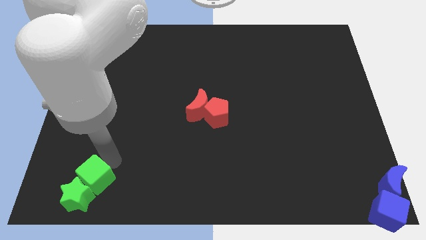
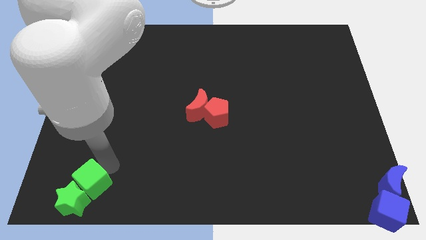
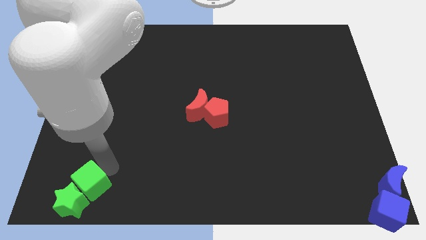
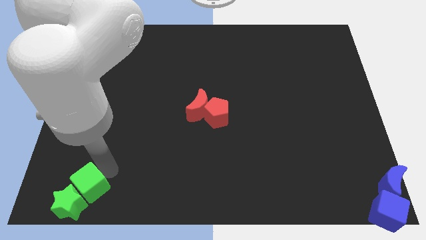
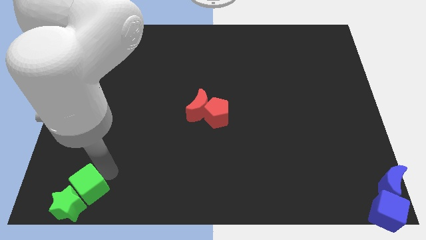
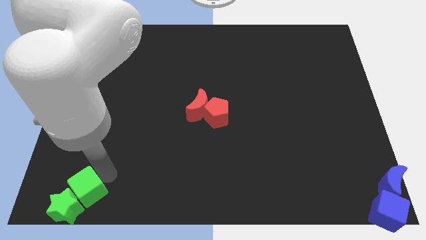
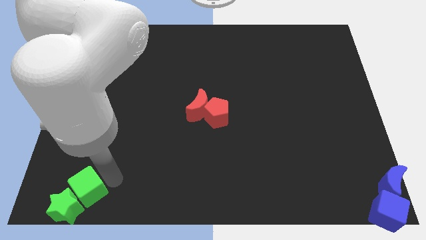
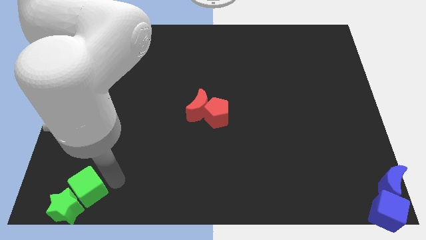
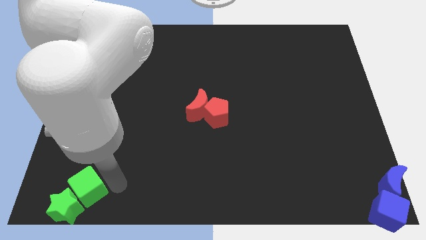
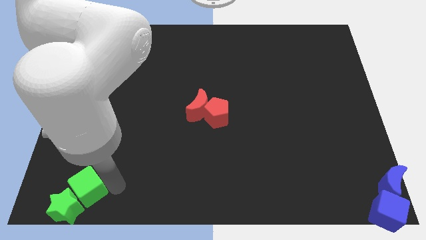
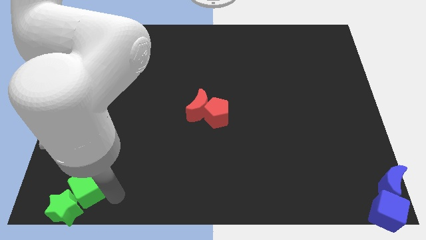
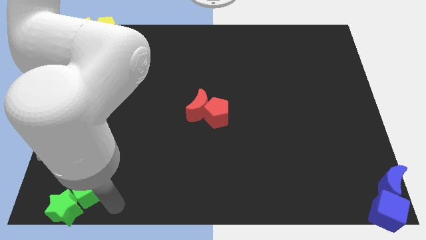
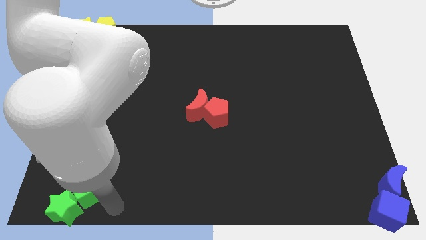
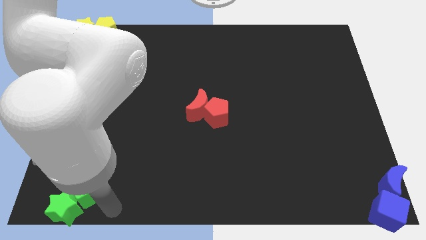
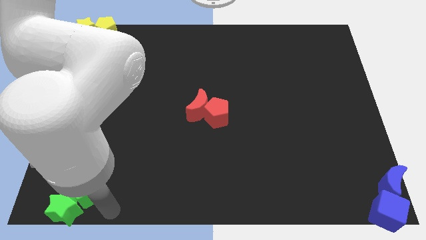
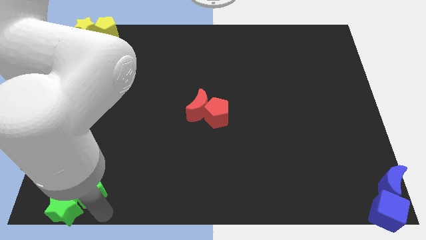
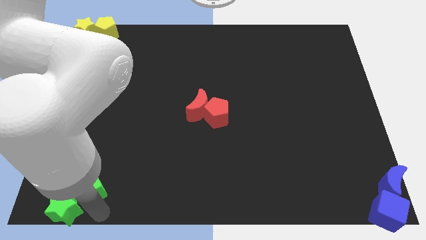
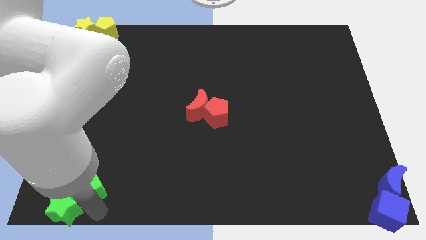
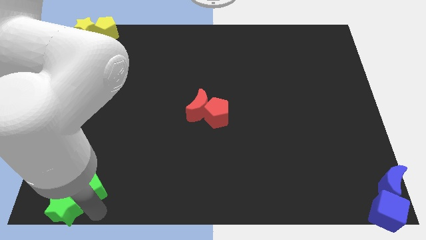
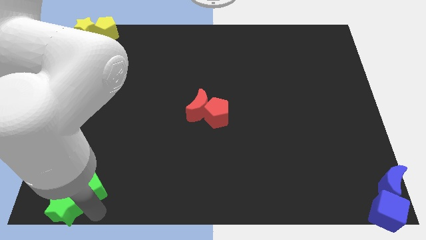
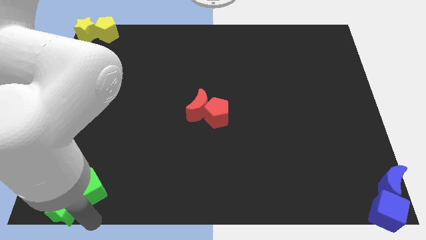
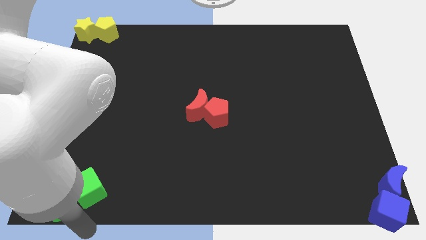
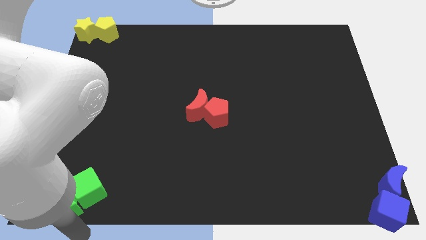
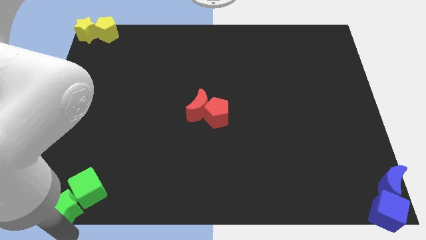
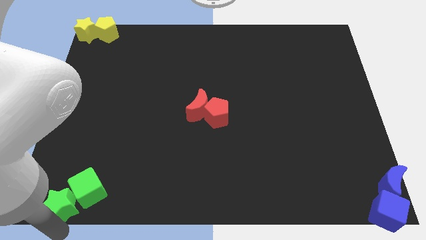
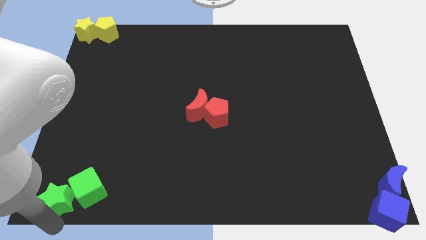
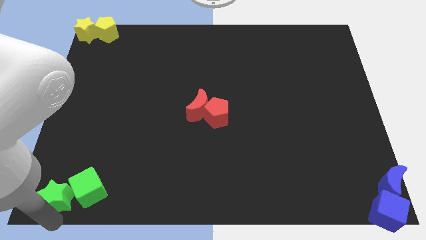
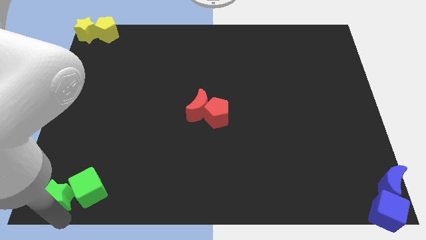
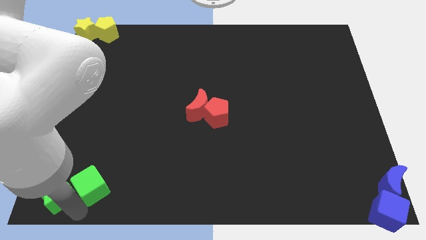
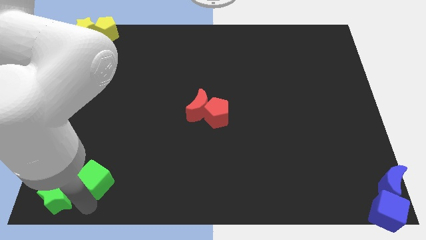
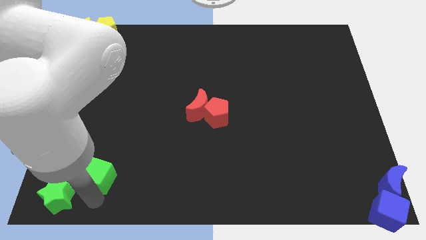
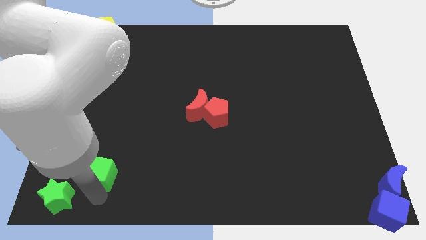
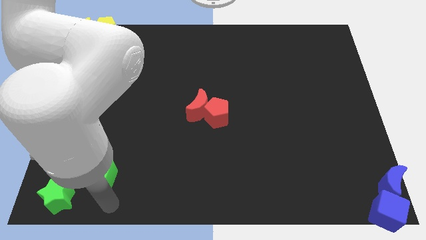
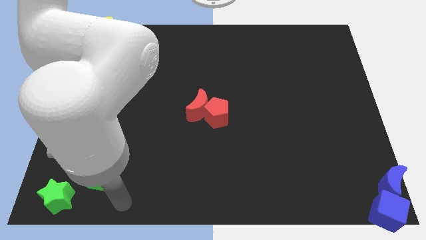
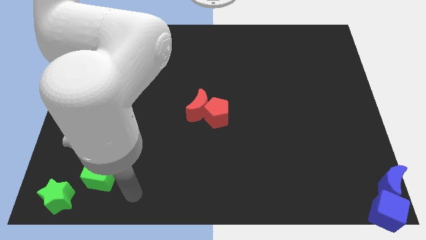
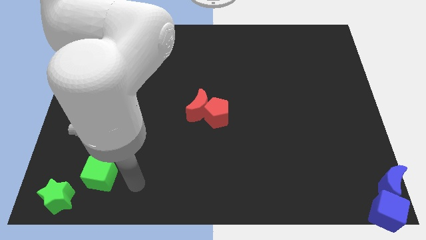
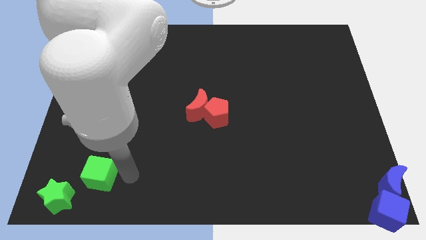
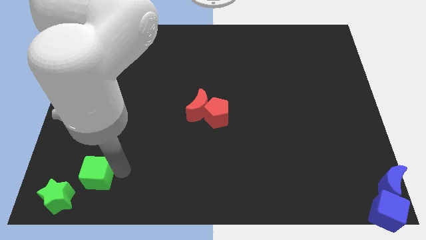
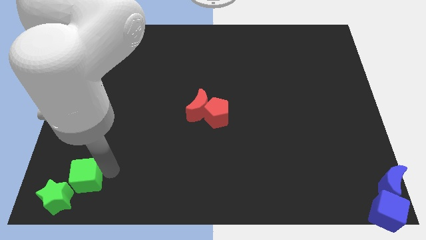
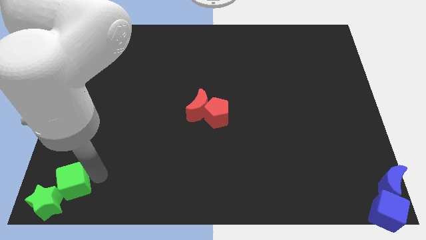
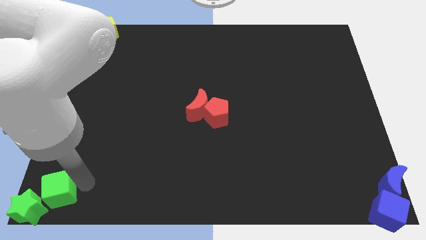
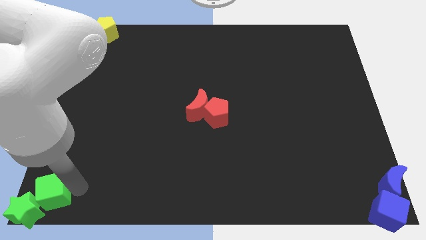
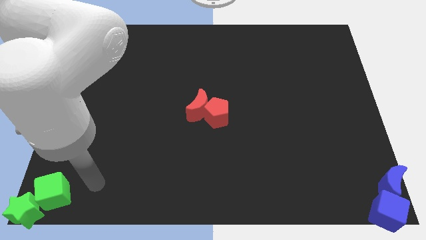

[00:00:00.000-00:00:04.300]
push the green cube with the green star towards the bottom left corner

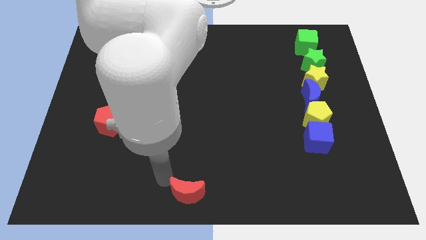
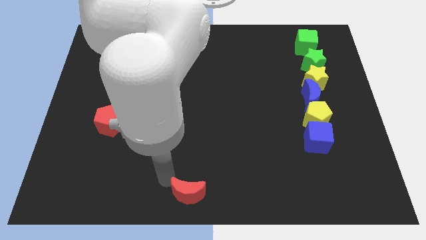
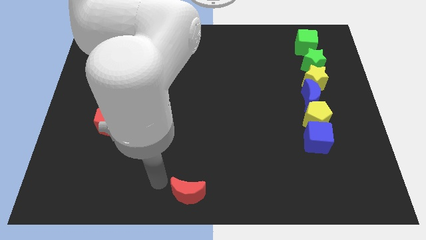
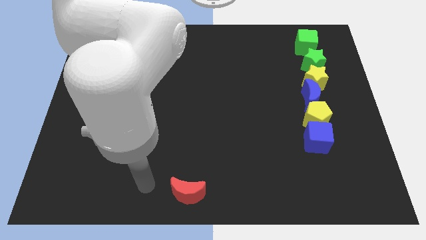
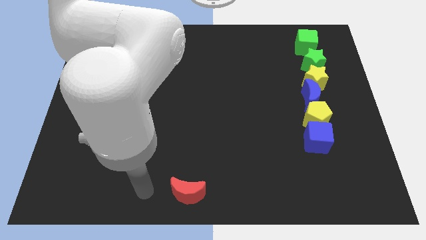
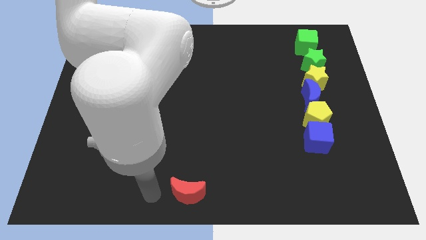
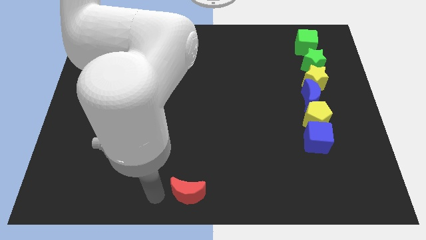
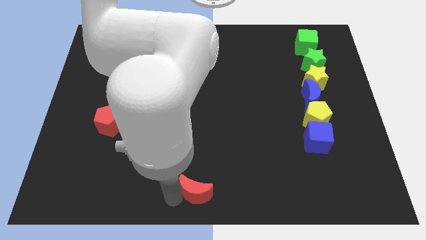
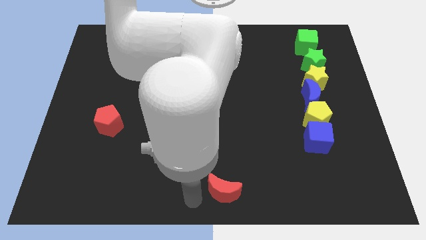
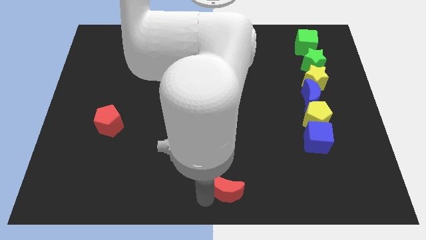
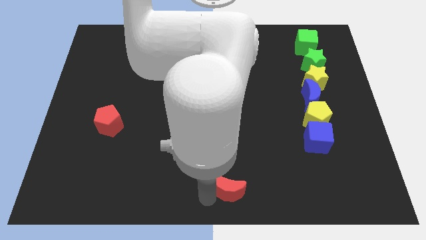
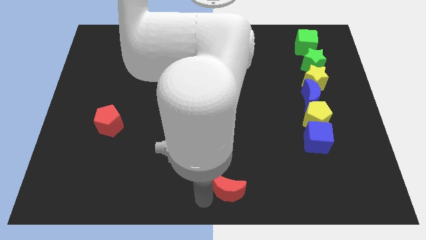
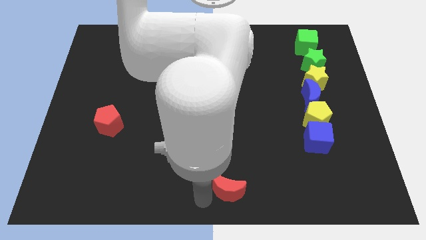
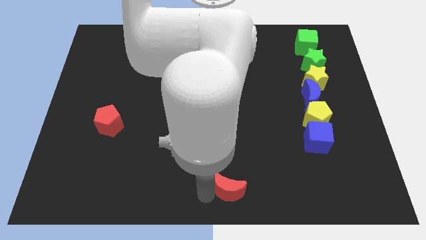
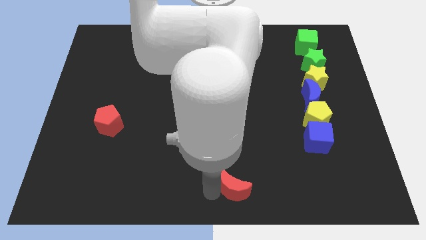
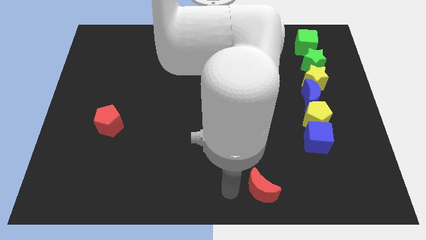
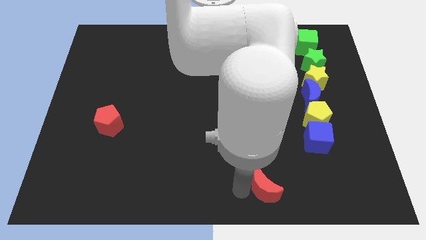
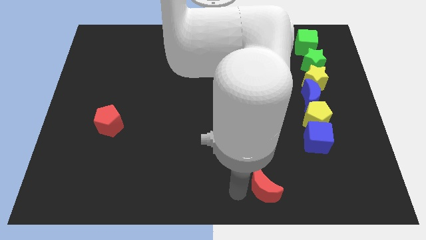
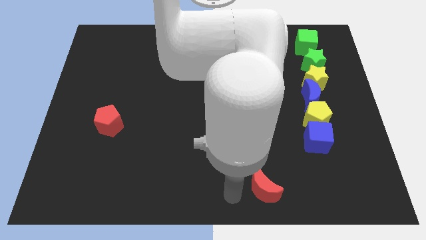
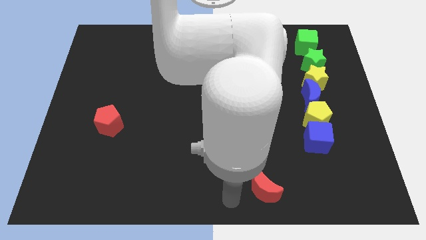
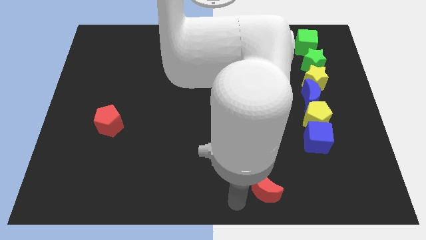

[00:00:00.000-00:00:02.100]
move the red crescent towards right side of the board

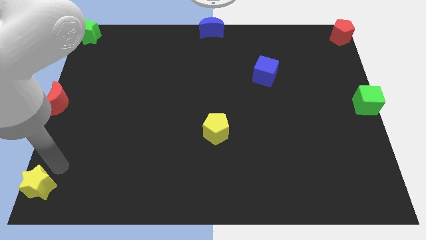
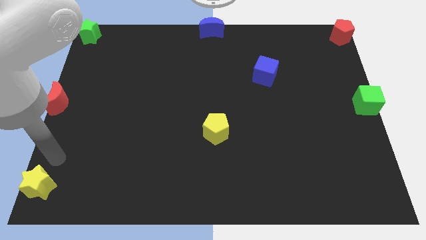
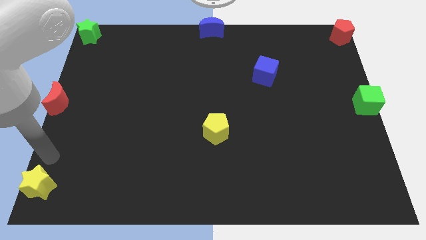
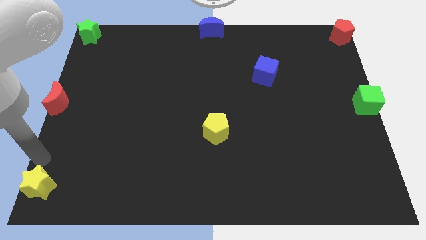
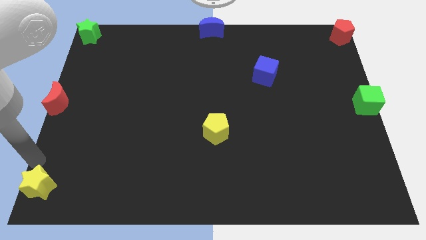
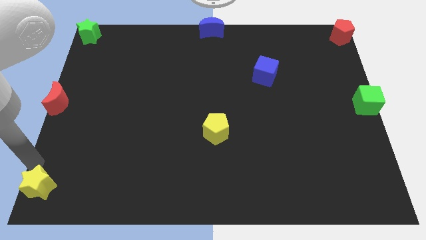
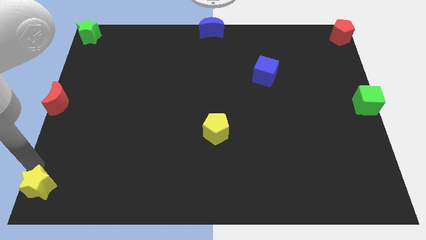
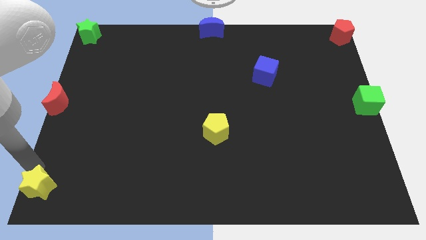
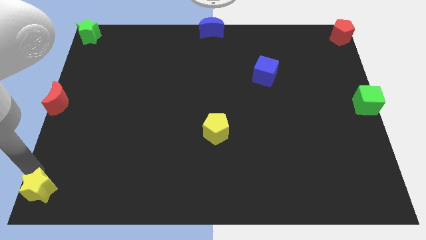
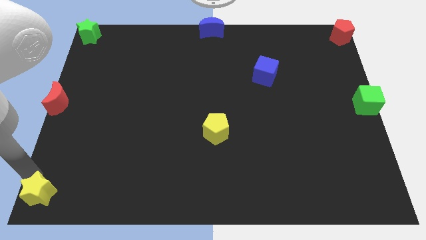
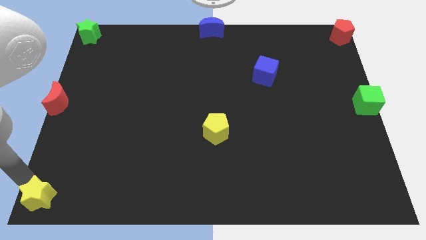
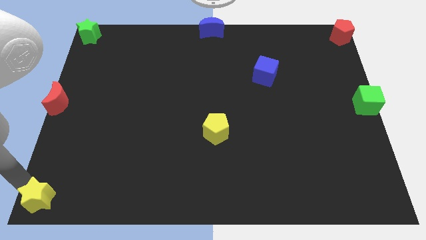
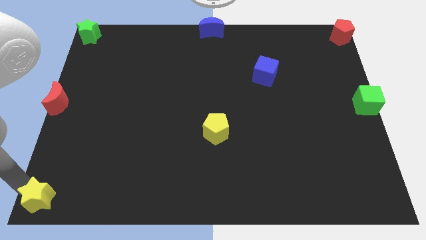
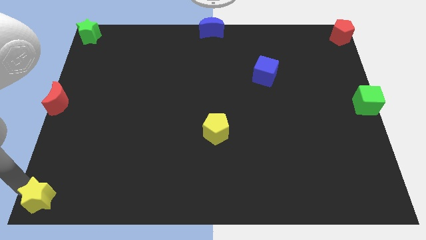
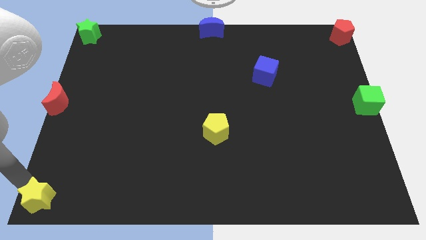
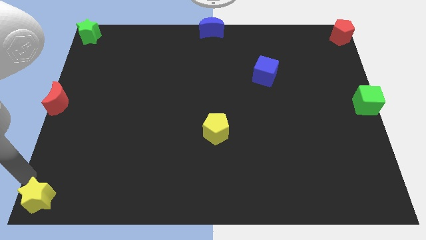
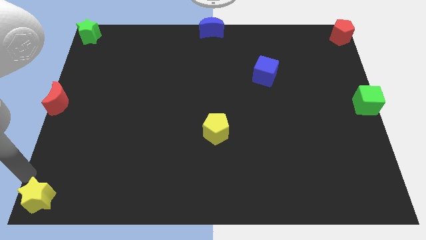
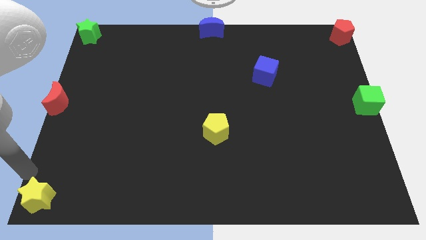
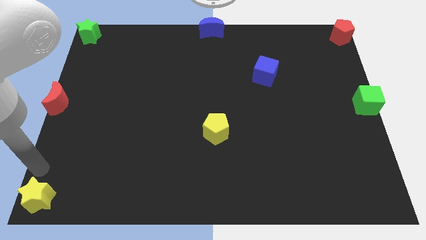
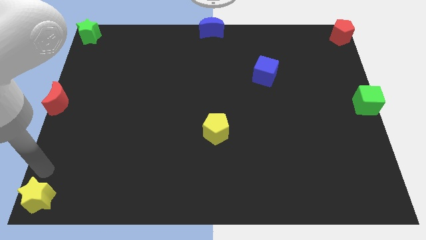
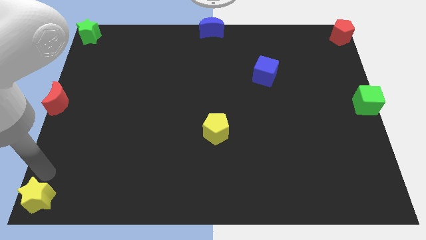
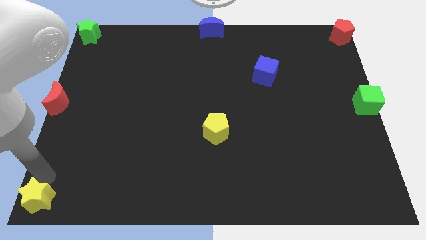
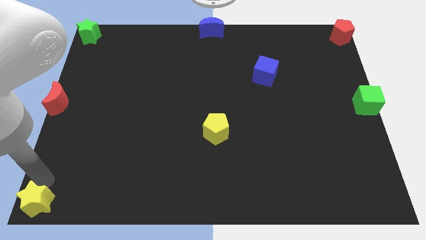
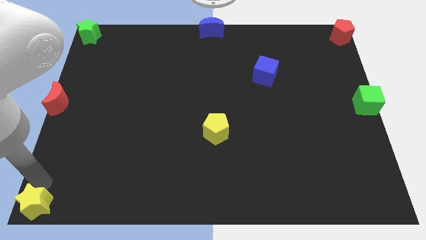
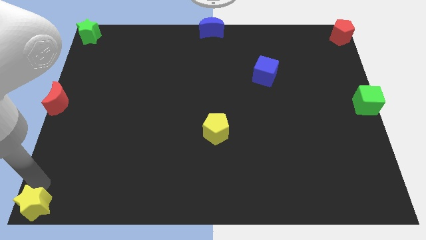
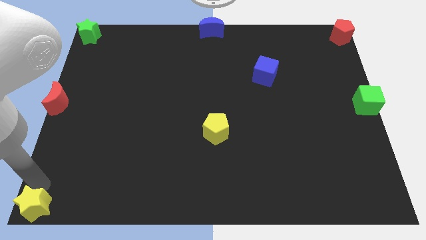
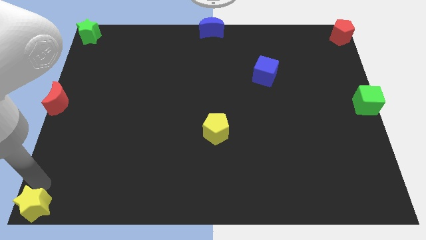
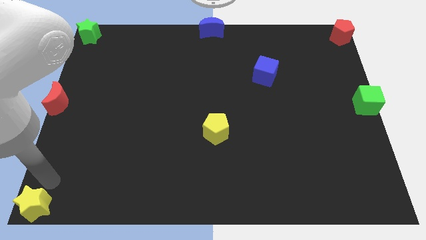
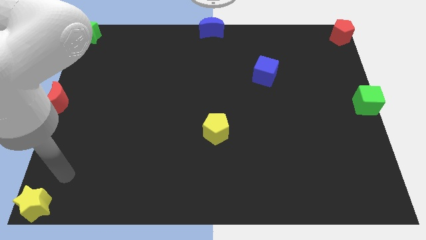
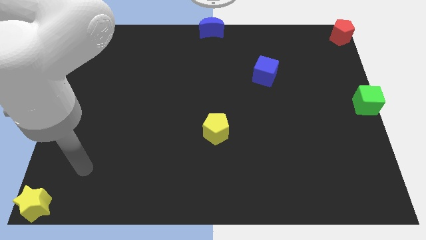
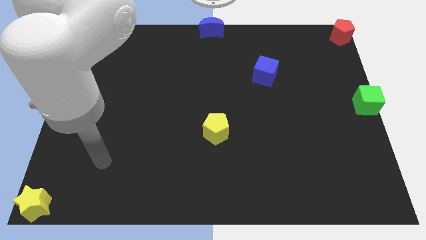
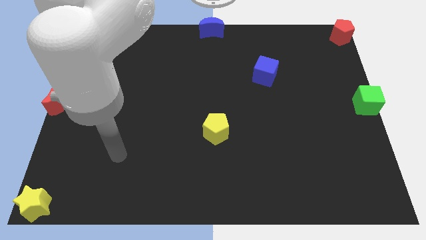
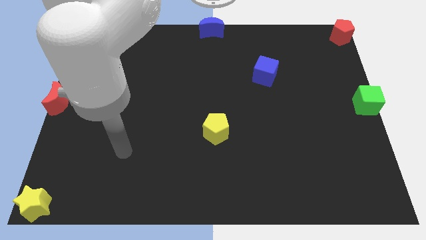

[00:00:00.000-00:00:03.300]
push the yellow star to the bottom left corner of the board
